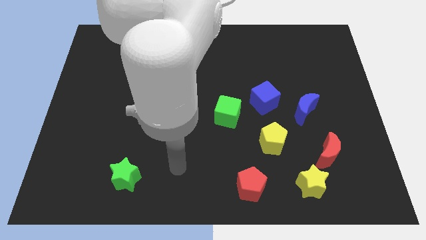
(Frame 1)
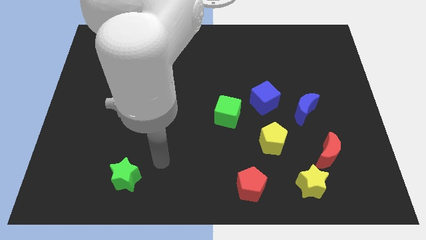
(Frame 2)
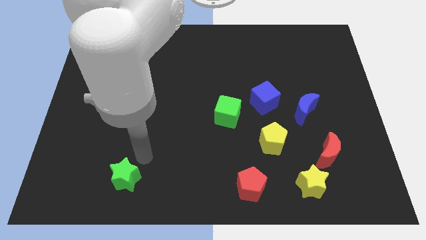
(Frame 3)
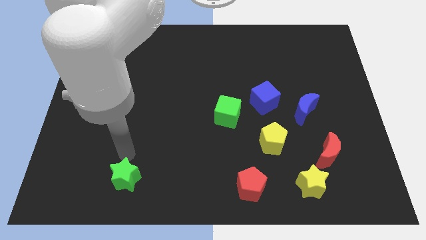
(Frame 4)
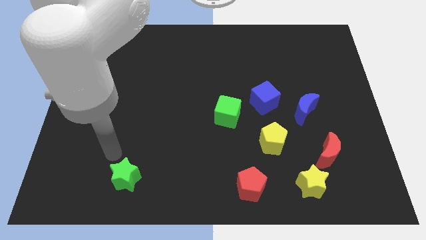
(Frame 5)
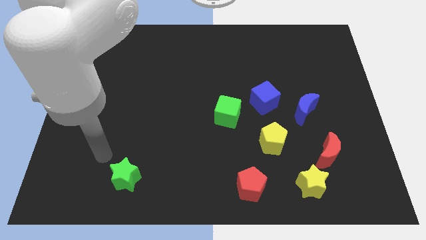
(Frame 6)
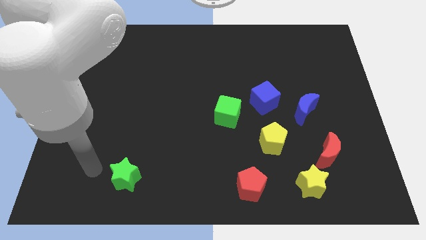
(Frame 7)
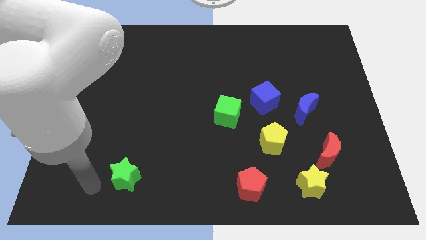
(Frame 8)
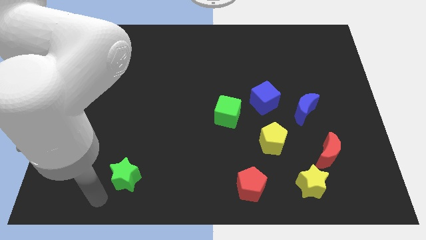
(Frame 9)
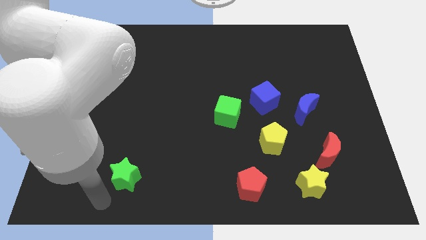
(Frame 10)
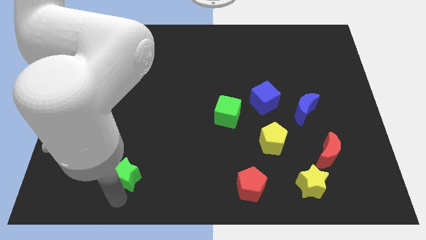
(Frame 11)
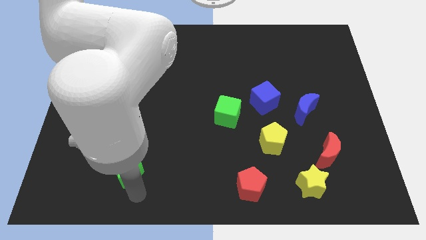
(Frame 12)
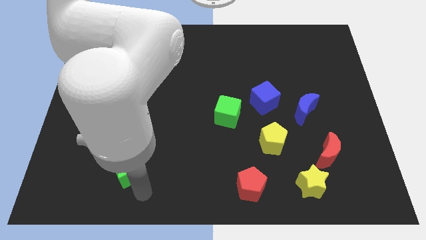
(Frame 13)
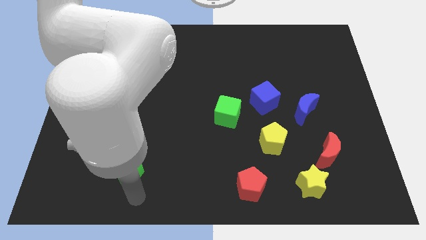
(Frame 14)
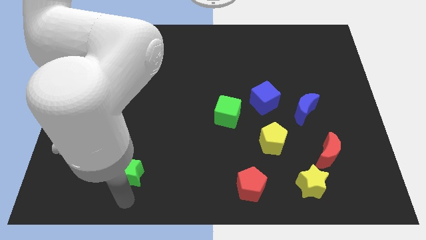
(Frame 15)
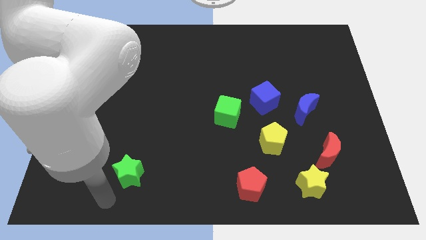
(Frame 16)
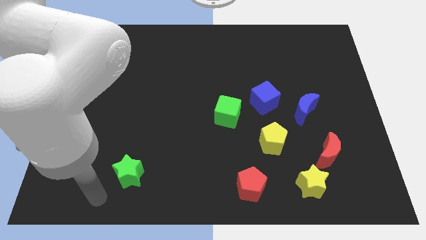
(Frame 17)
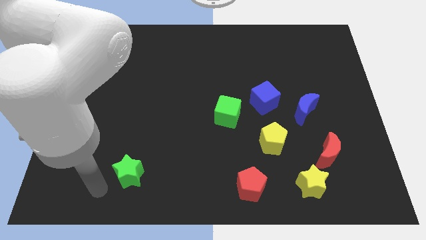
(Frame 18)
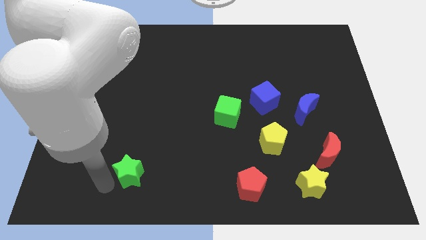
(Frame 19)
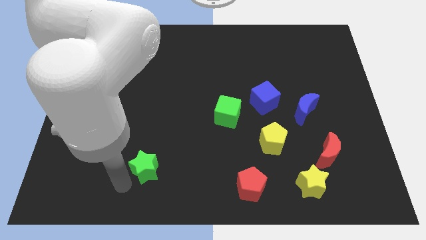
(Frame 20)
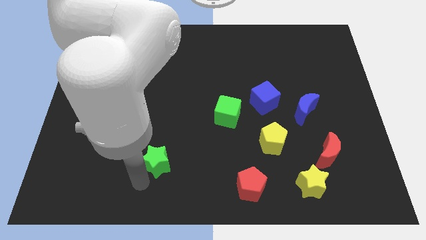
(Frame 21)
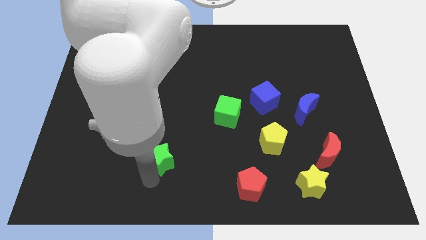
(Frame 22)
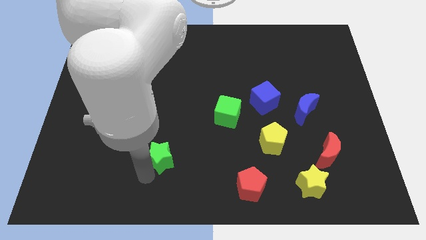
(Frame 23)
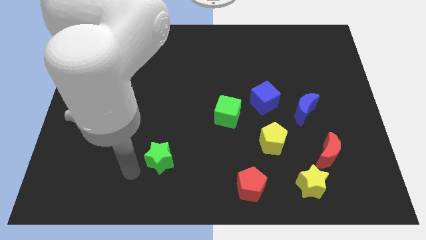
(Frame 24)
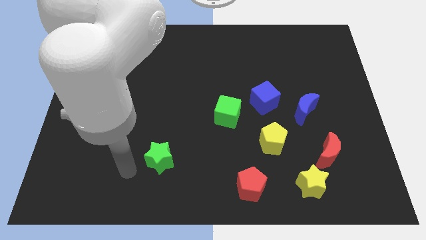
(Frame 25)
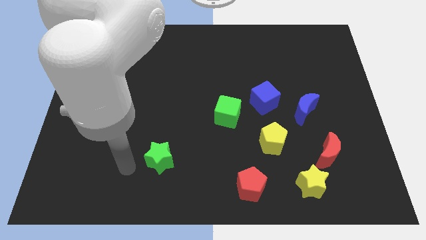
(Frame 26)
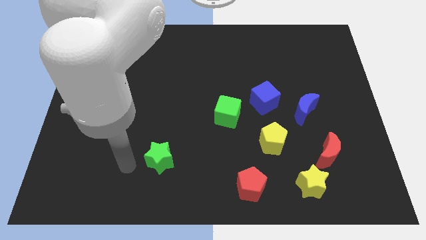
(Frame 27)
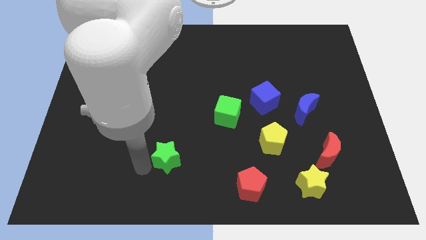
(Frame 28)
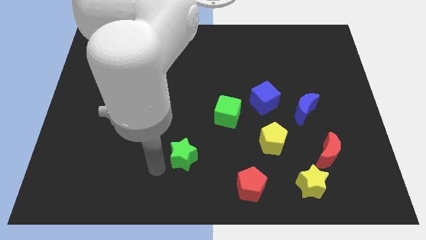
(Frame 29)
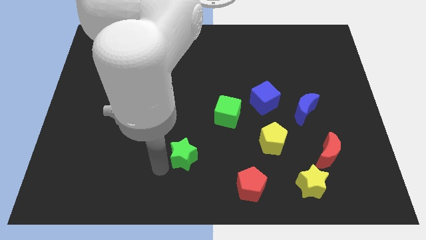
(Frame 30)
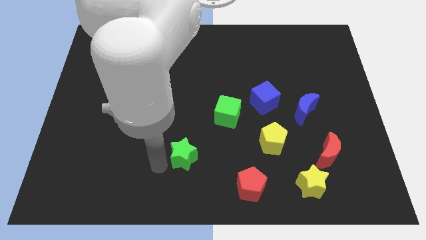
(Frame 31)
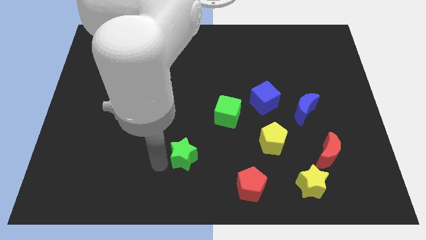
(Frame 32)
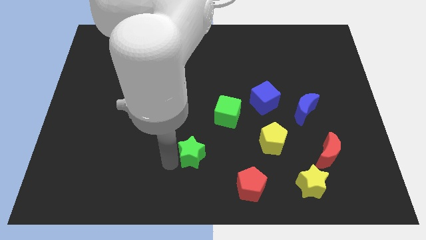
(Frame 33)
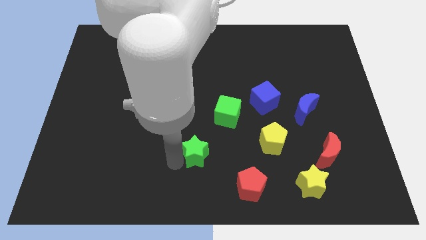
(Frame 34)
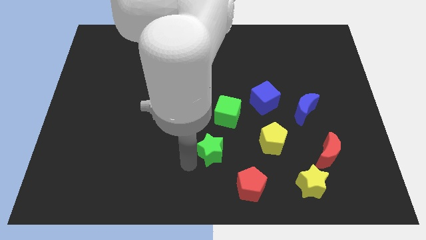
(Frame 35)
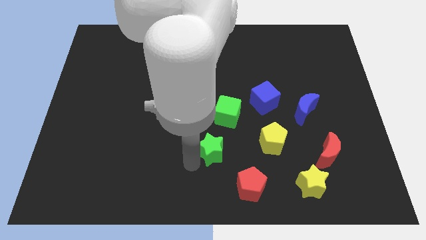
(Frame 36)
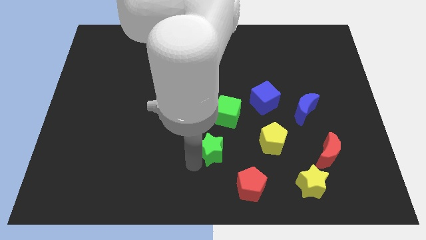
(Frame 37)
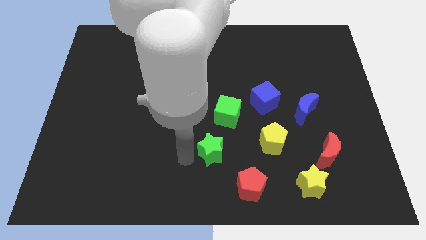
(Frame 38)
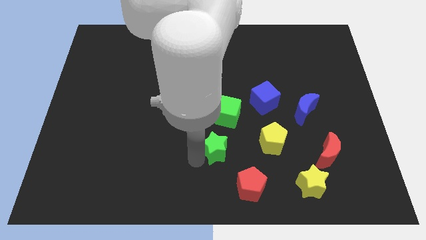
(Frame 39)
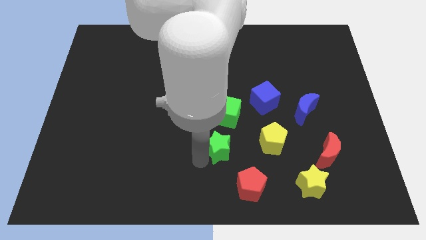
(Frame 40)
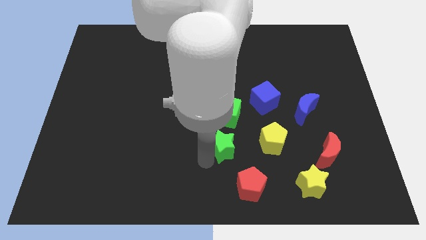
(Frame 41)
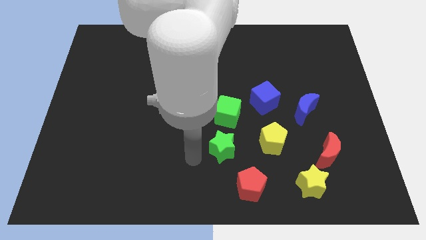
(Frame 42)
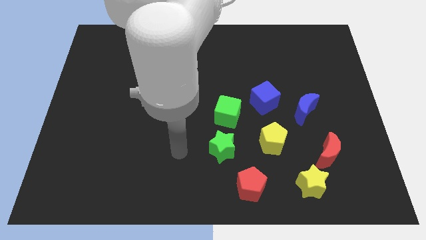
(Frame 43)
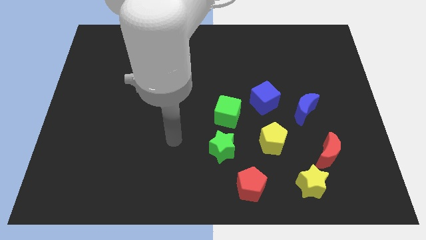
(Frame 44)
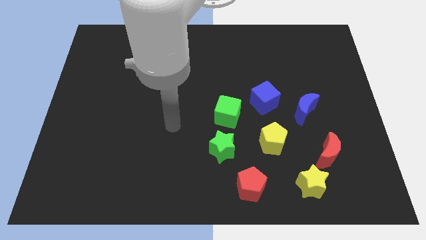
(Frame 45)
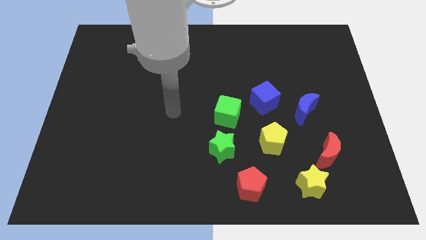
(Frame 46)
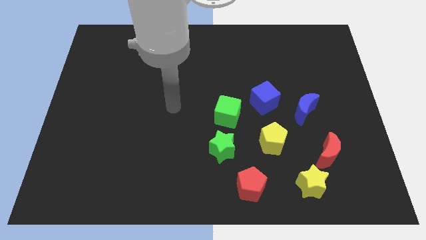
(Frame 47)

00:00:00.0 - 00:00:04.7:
place the green star diagonally top left to red pentagon

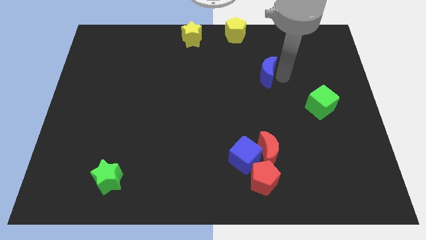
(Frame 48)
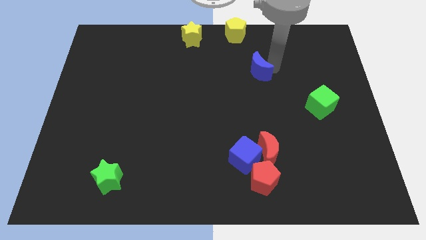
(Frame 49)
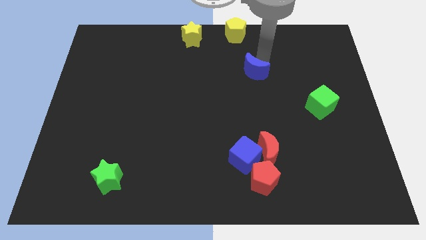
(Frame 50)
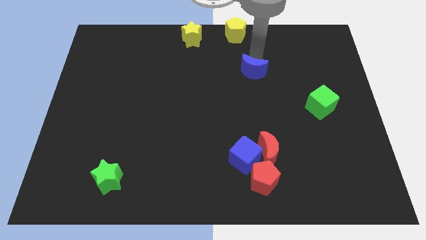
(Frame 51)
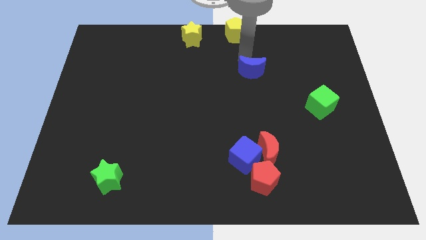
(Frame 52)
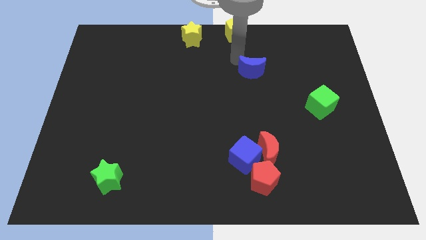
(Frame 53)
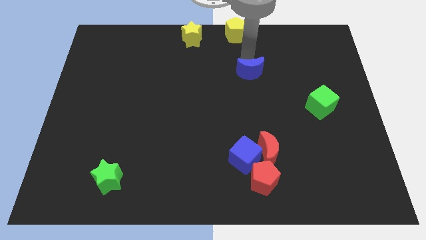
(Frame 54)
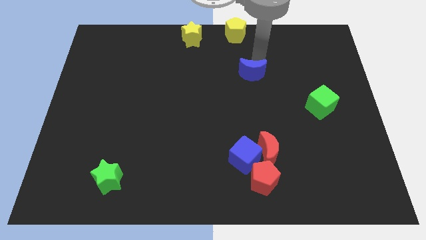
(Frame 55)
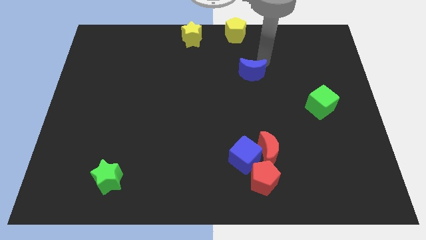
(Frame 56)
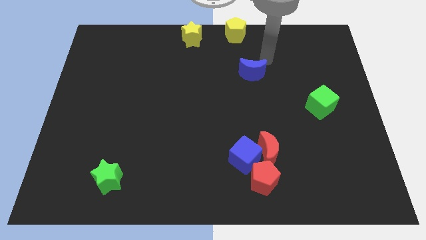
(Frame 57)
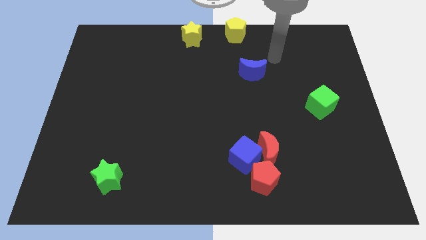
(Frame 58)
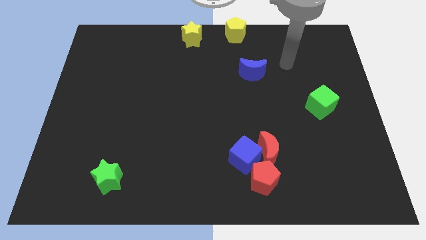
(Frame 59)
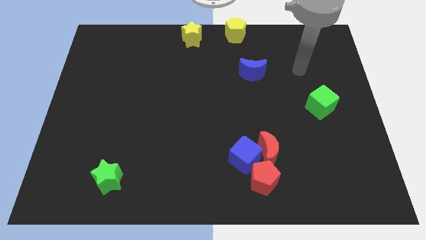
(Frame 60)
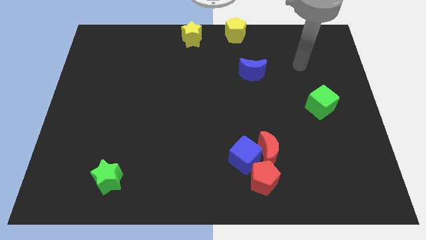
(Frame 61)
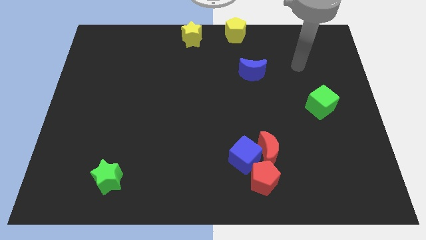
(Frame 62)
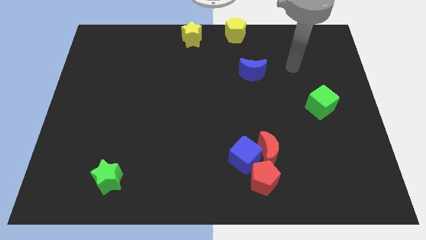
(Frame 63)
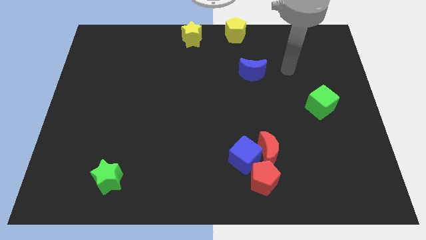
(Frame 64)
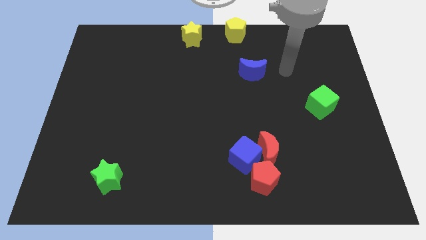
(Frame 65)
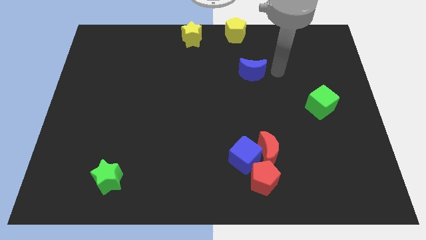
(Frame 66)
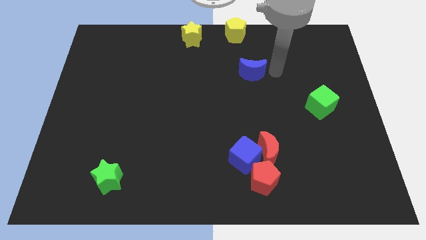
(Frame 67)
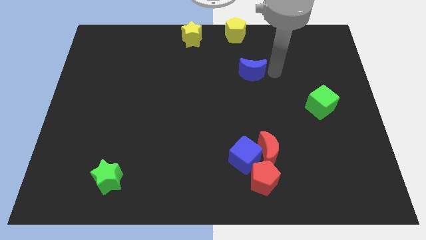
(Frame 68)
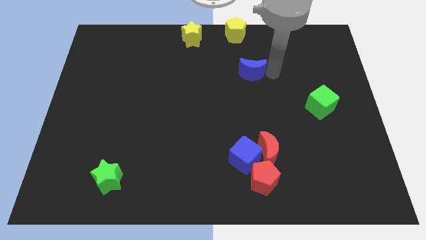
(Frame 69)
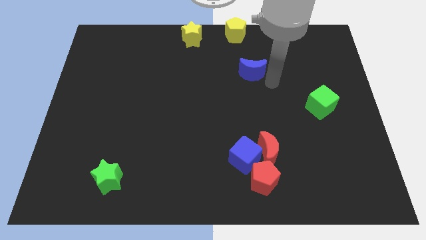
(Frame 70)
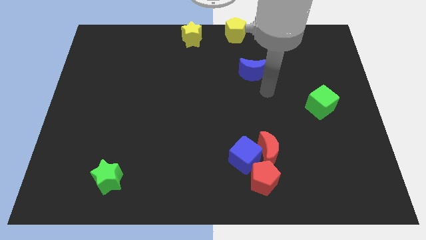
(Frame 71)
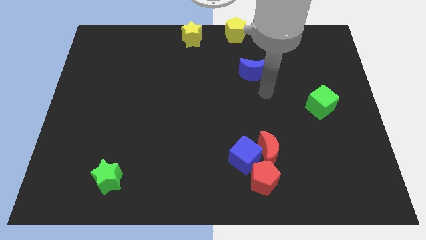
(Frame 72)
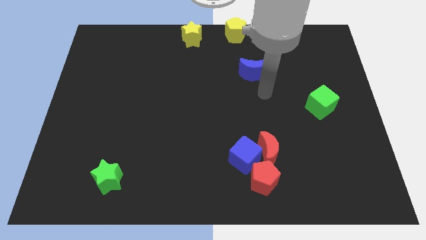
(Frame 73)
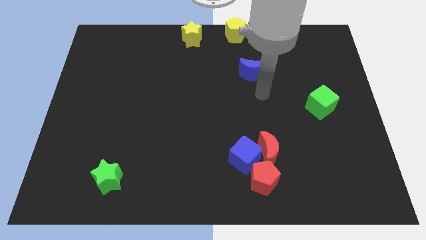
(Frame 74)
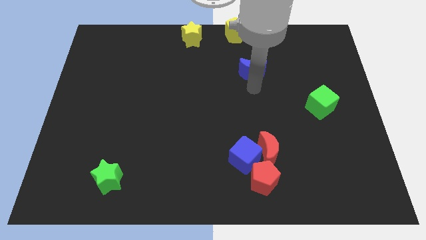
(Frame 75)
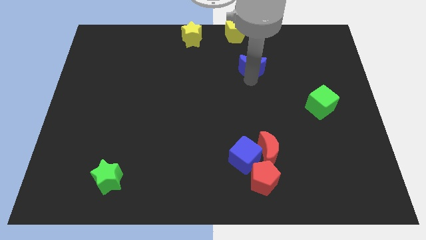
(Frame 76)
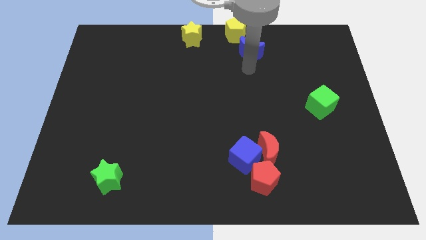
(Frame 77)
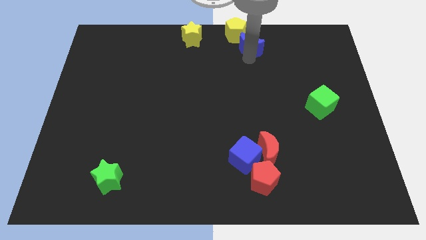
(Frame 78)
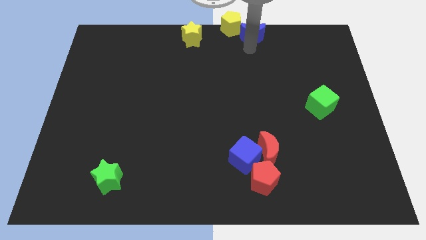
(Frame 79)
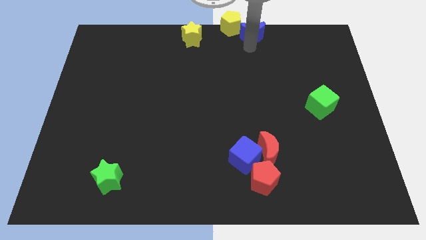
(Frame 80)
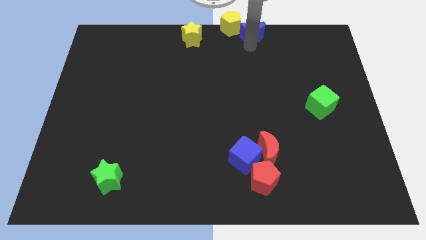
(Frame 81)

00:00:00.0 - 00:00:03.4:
push the blue moon into yellow pentagon

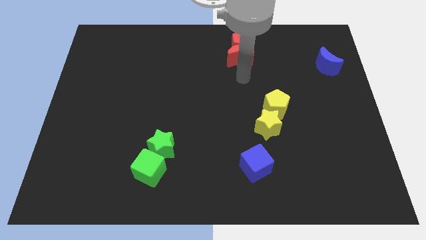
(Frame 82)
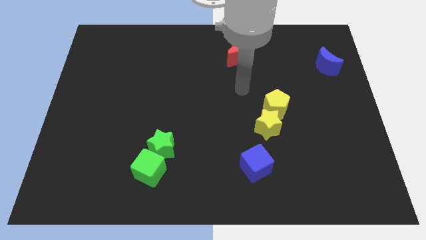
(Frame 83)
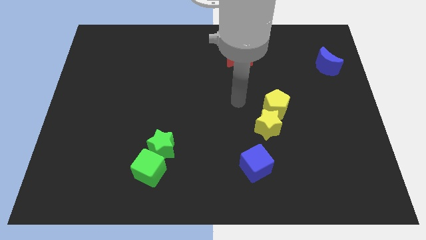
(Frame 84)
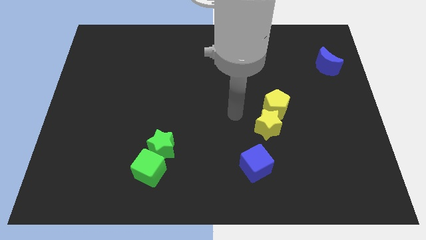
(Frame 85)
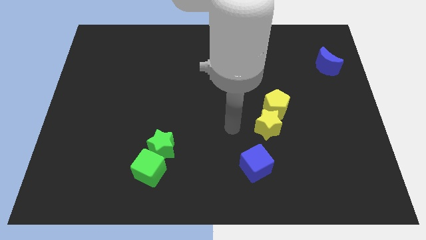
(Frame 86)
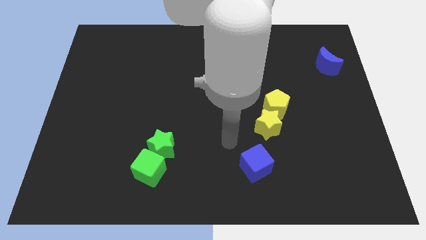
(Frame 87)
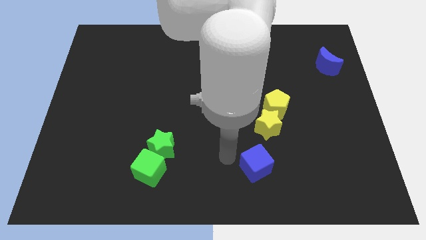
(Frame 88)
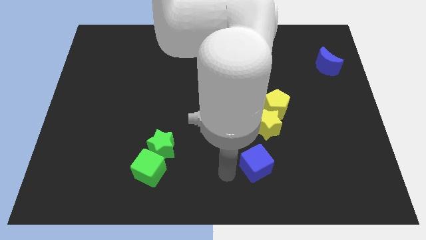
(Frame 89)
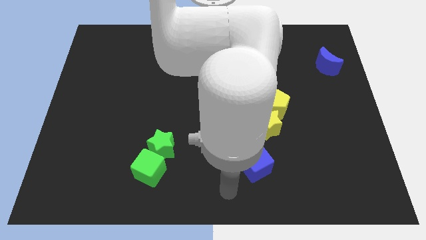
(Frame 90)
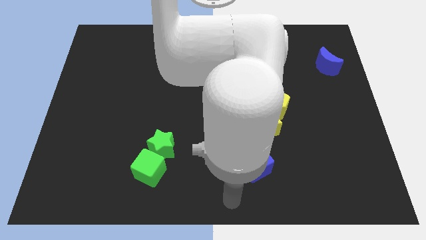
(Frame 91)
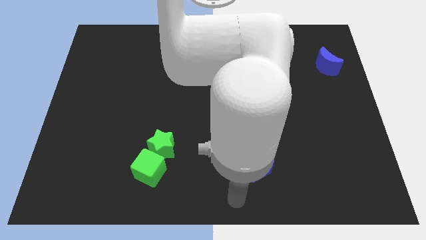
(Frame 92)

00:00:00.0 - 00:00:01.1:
move the arm away from the red moon
